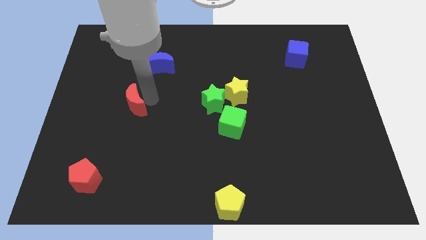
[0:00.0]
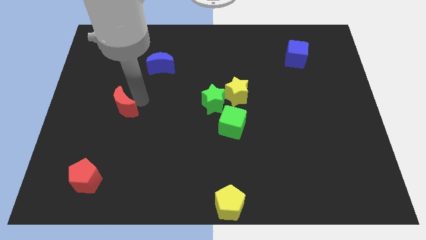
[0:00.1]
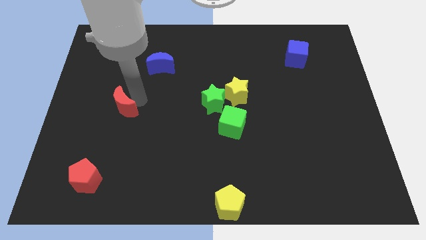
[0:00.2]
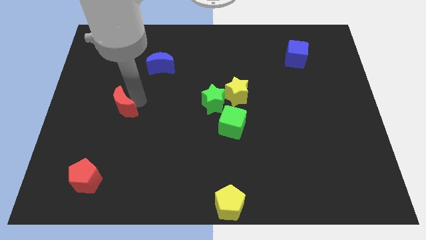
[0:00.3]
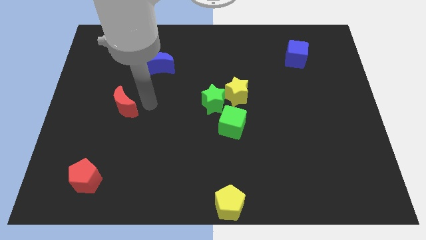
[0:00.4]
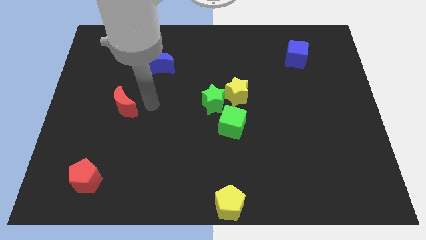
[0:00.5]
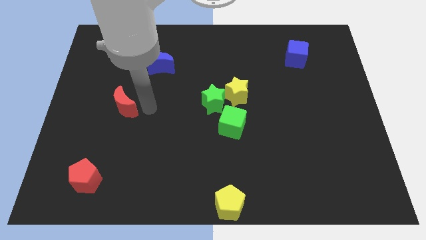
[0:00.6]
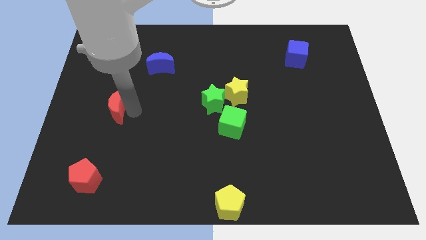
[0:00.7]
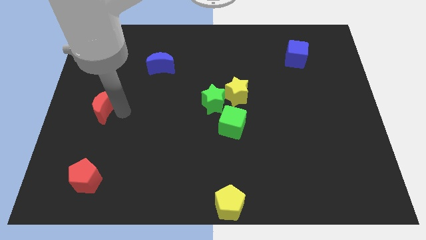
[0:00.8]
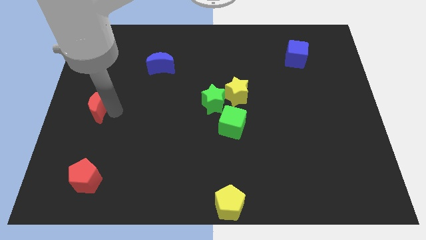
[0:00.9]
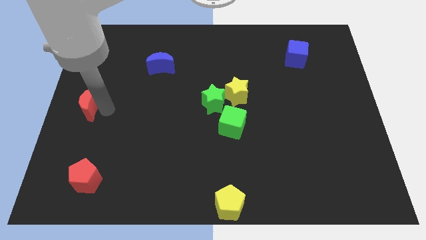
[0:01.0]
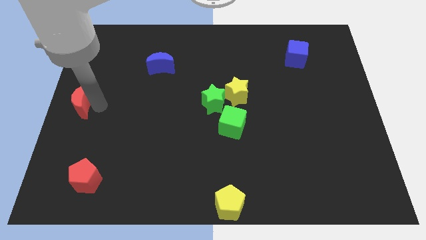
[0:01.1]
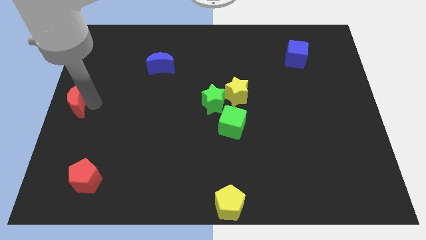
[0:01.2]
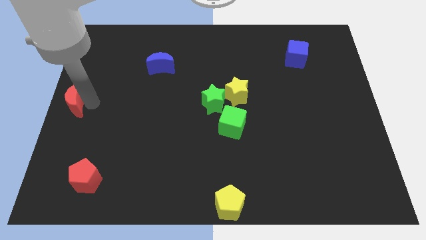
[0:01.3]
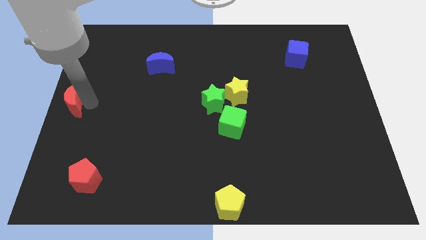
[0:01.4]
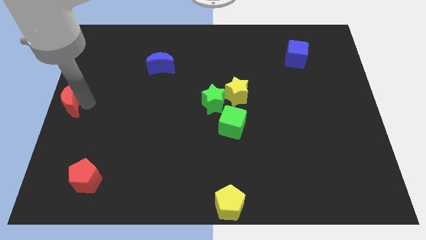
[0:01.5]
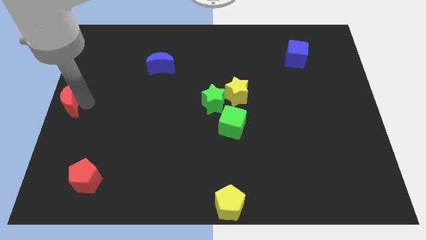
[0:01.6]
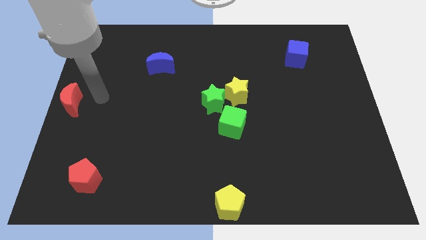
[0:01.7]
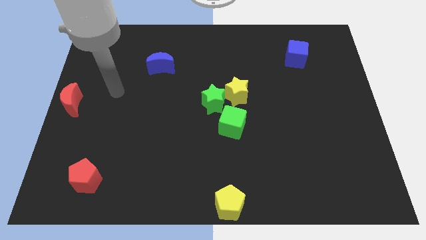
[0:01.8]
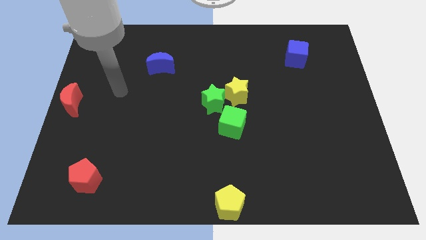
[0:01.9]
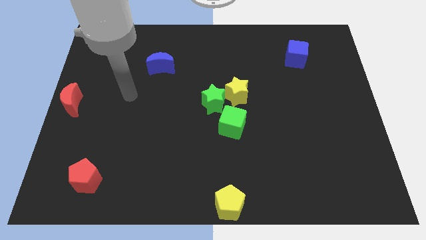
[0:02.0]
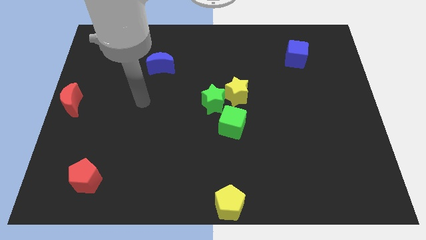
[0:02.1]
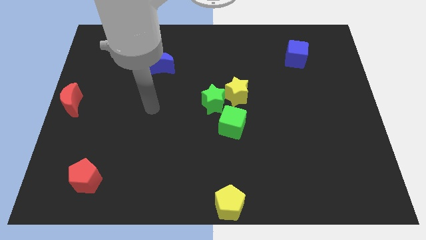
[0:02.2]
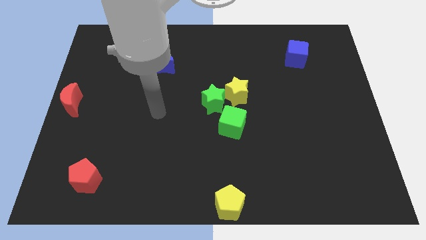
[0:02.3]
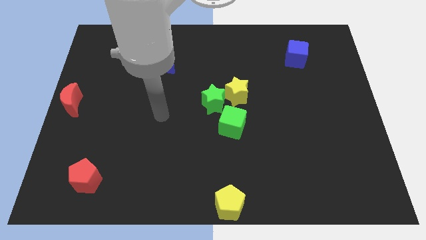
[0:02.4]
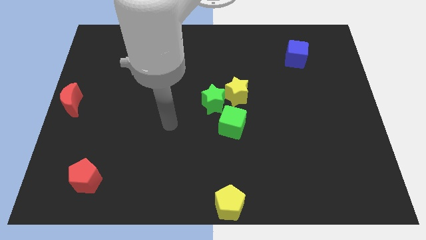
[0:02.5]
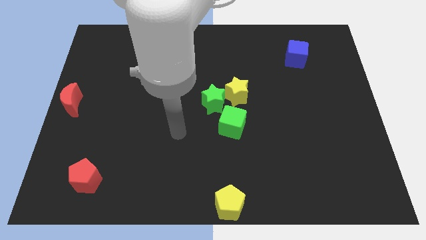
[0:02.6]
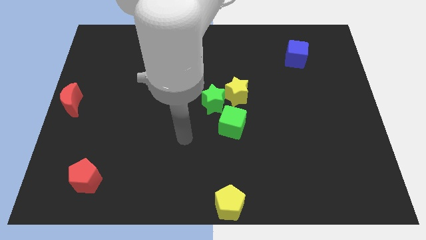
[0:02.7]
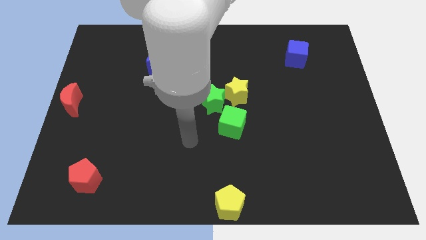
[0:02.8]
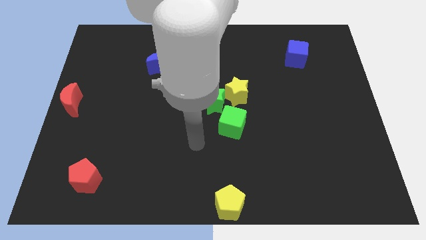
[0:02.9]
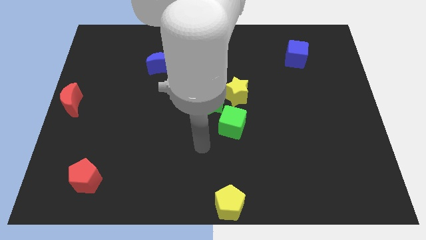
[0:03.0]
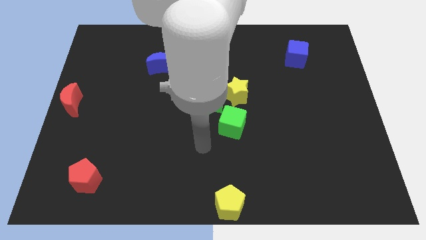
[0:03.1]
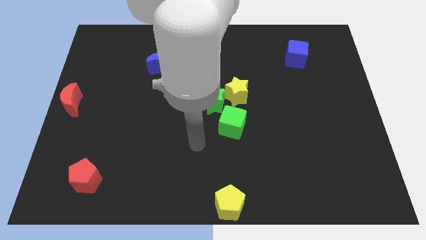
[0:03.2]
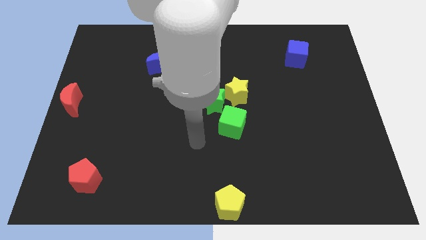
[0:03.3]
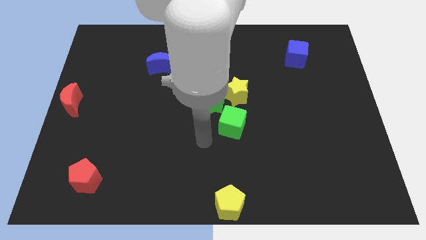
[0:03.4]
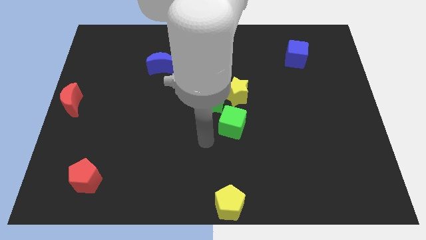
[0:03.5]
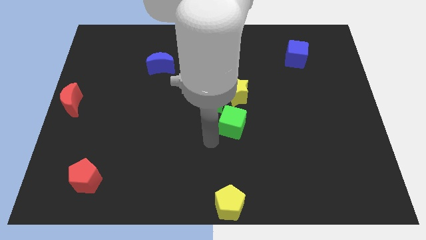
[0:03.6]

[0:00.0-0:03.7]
place the red moon at the center left side of the board

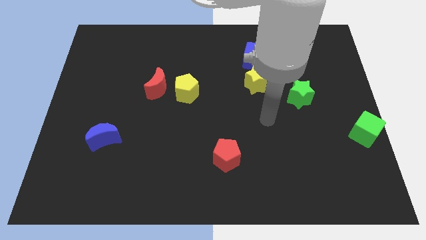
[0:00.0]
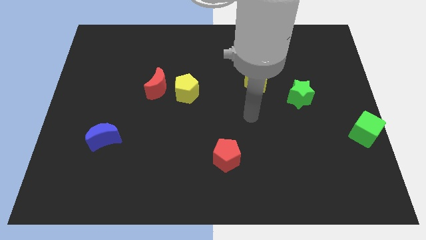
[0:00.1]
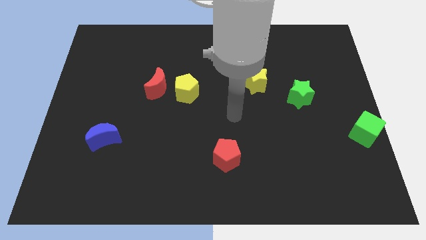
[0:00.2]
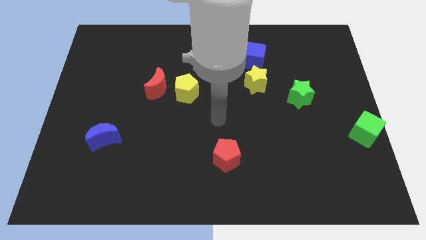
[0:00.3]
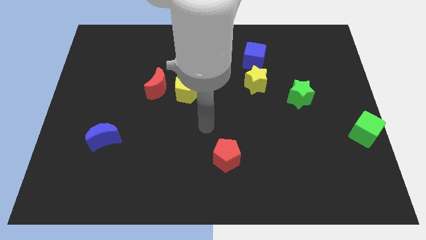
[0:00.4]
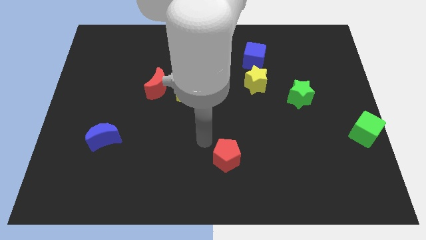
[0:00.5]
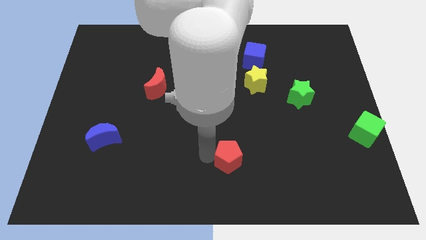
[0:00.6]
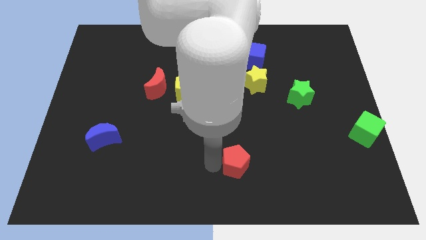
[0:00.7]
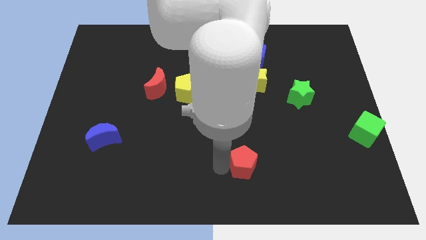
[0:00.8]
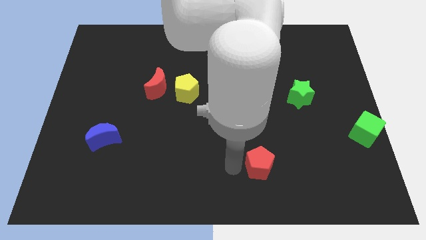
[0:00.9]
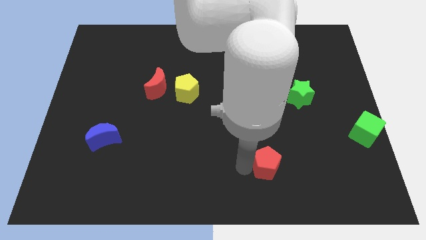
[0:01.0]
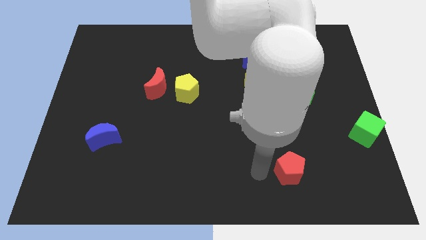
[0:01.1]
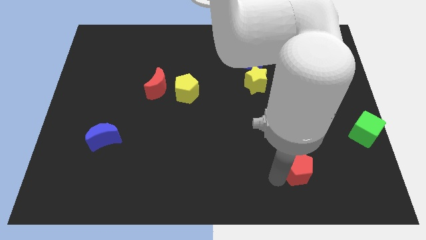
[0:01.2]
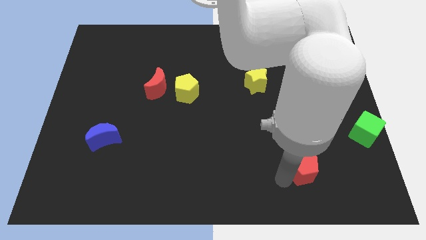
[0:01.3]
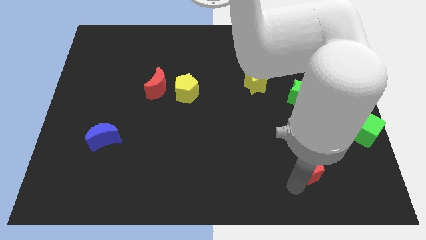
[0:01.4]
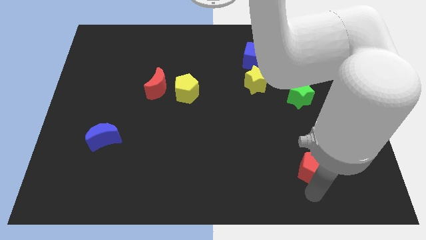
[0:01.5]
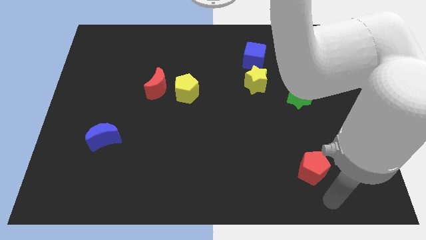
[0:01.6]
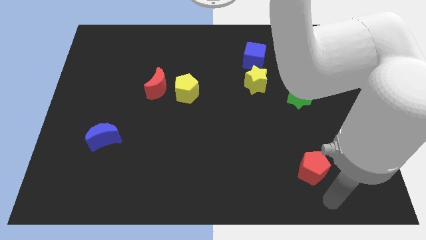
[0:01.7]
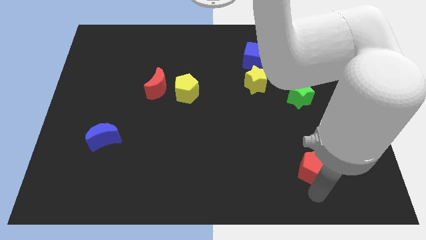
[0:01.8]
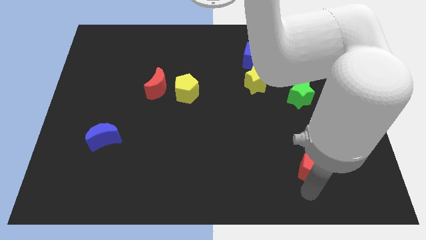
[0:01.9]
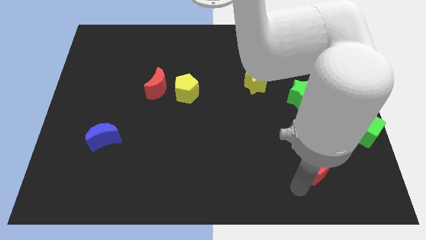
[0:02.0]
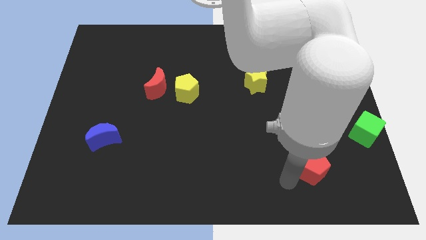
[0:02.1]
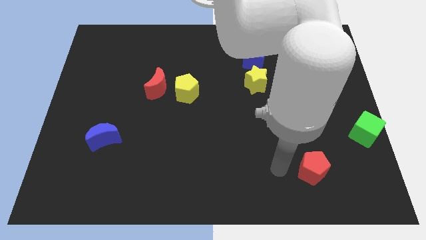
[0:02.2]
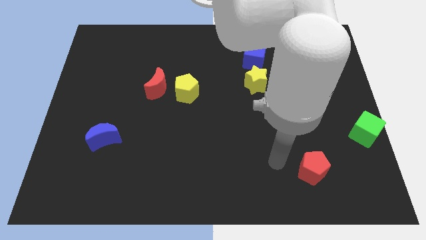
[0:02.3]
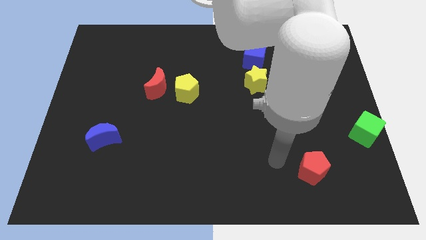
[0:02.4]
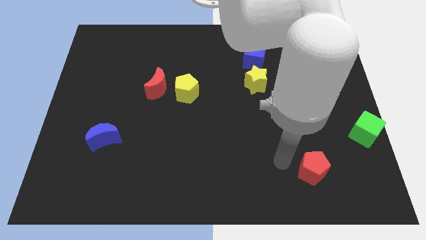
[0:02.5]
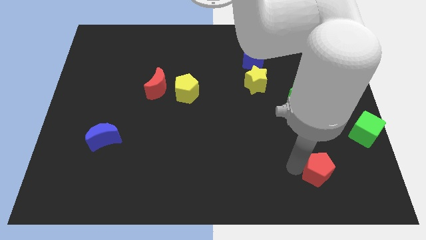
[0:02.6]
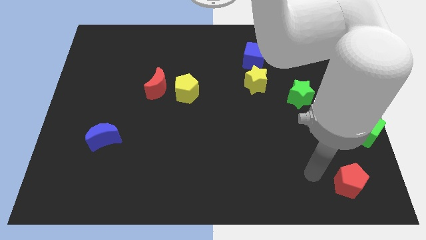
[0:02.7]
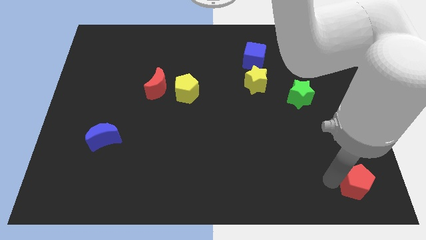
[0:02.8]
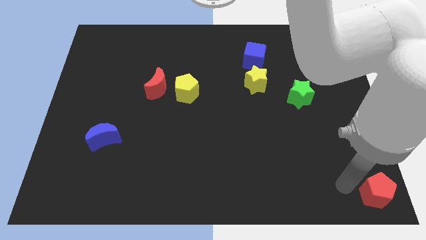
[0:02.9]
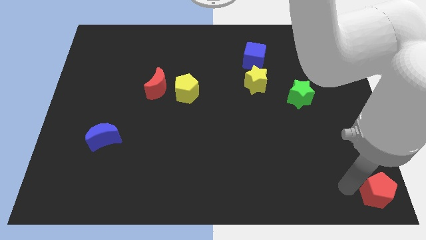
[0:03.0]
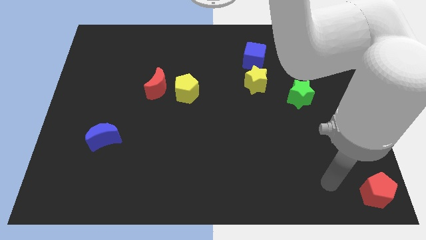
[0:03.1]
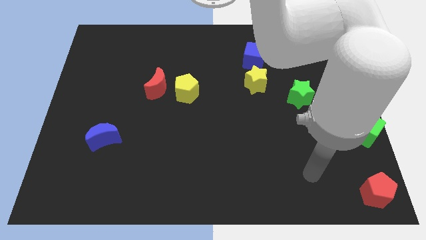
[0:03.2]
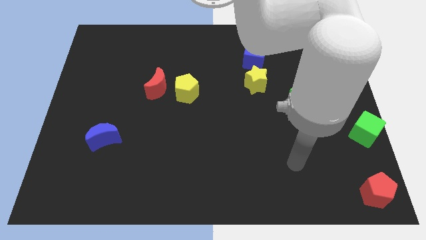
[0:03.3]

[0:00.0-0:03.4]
move the red pentagon to the bottom right corner of the red pentagon

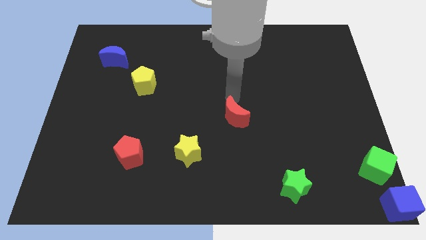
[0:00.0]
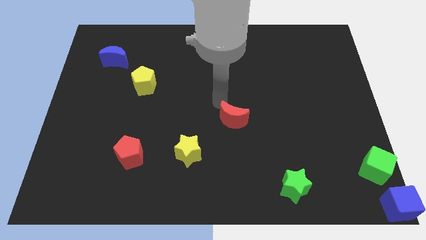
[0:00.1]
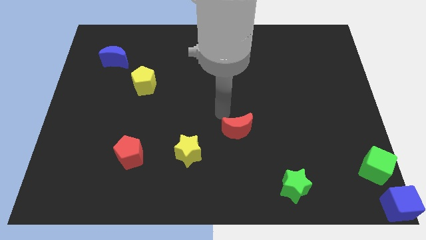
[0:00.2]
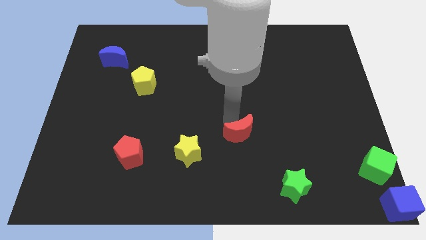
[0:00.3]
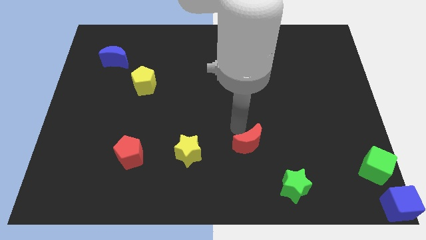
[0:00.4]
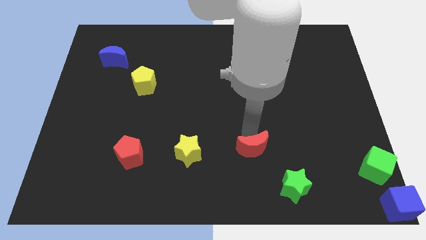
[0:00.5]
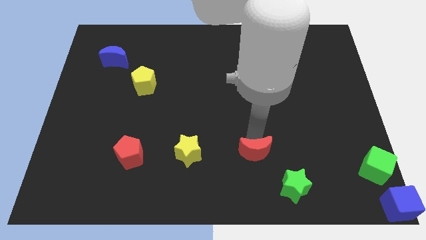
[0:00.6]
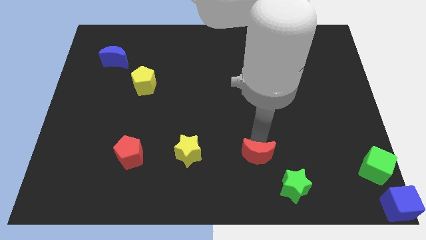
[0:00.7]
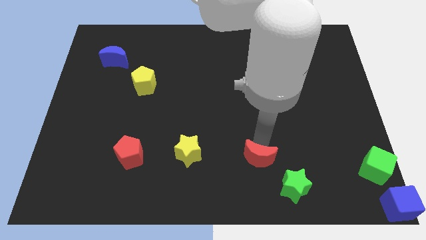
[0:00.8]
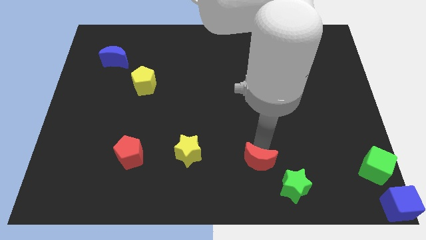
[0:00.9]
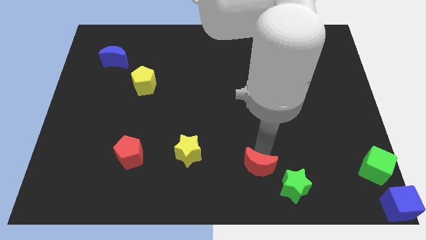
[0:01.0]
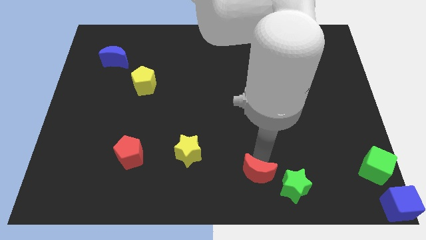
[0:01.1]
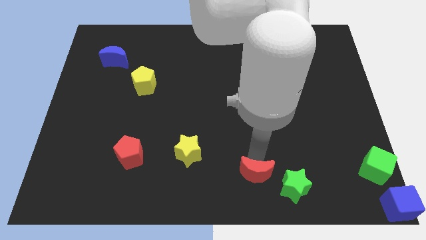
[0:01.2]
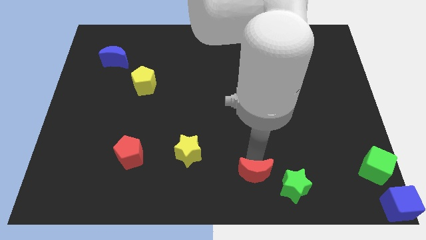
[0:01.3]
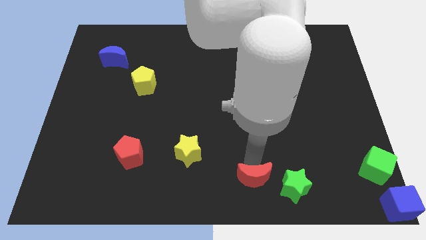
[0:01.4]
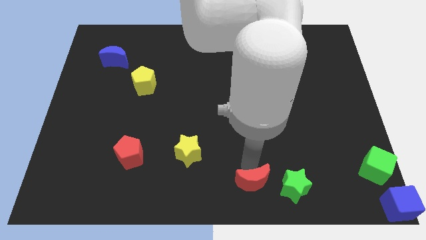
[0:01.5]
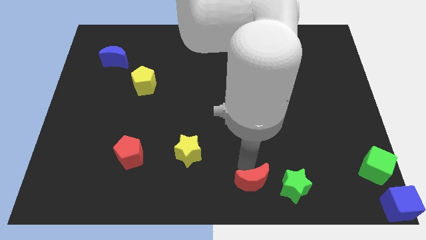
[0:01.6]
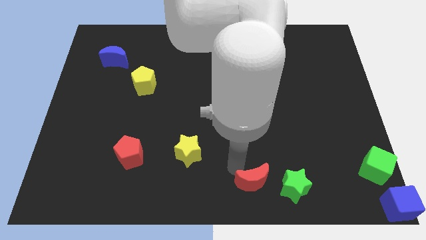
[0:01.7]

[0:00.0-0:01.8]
slide the red moon diagonally bottom right to the yellow star
